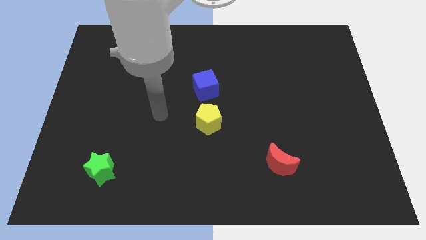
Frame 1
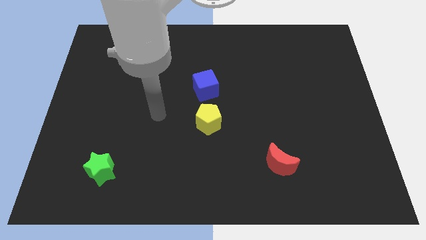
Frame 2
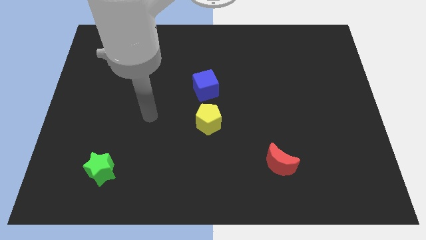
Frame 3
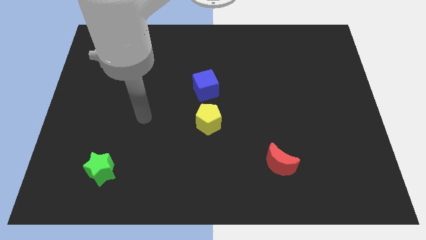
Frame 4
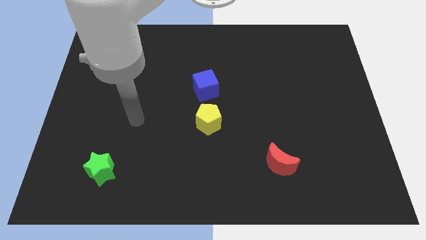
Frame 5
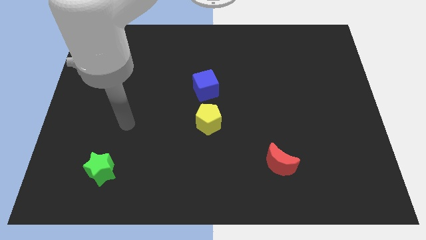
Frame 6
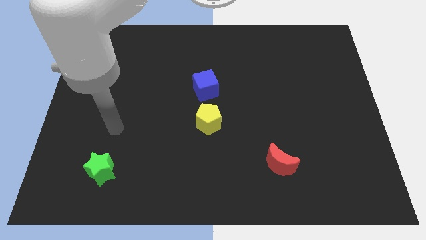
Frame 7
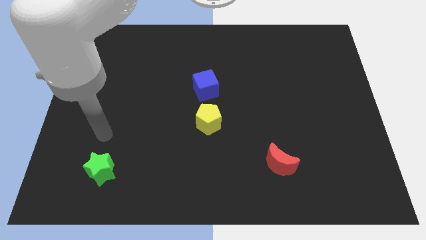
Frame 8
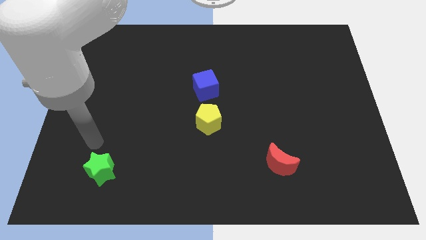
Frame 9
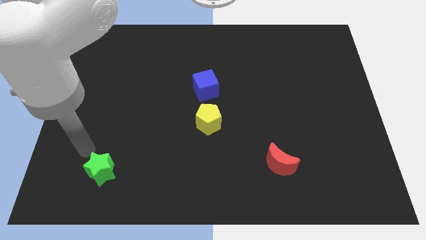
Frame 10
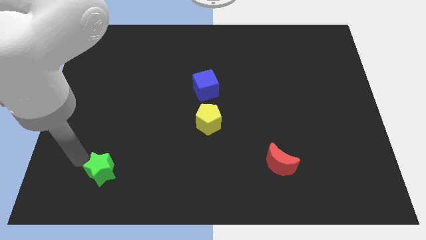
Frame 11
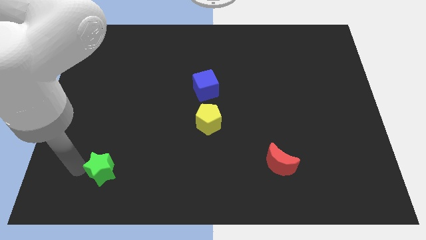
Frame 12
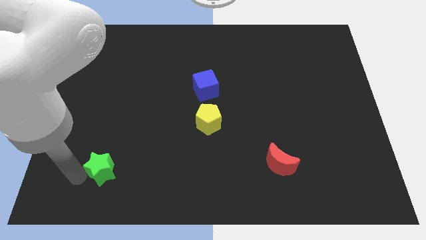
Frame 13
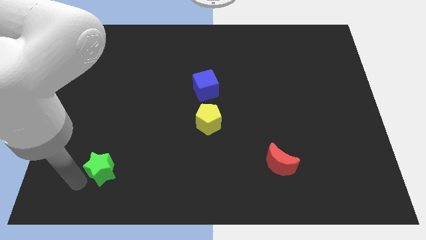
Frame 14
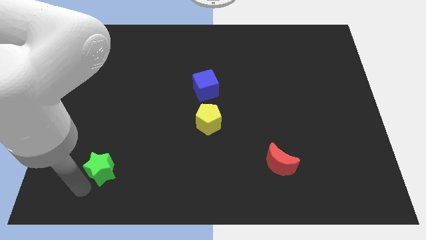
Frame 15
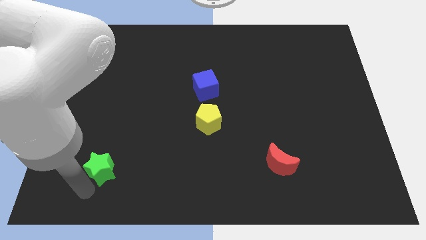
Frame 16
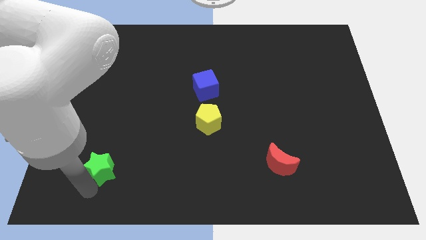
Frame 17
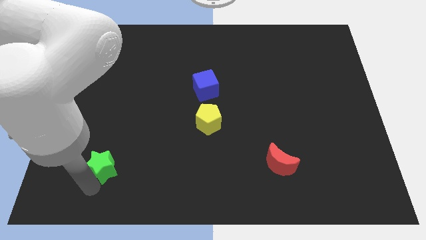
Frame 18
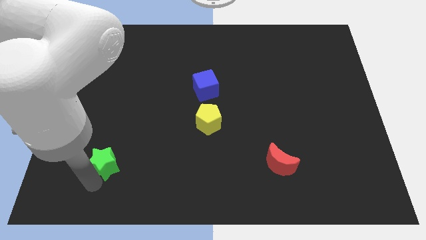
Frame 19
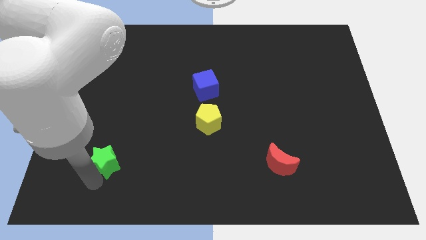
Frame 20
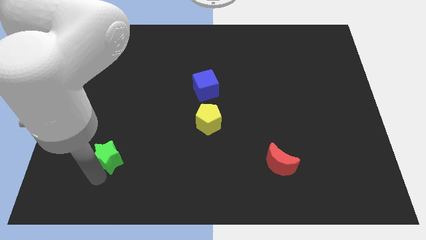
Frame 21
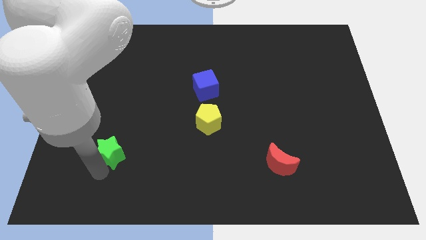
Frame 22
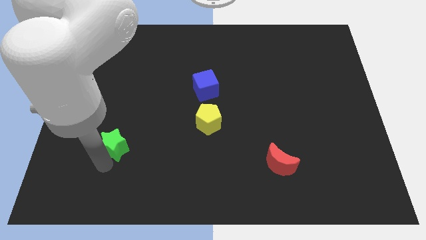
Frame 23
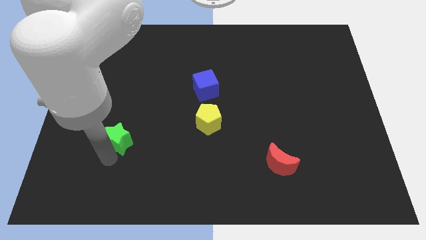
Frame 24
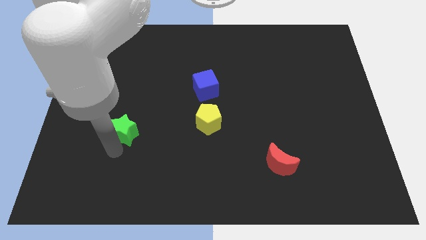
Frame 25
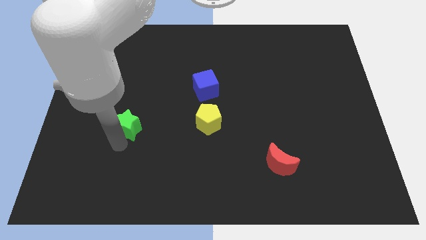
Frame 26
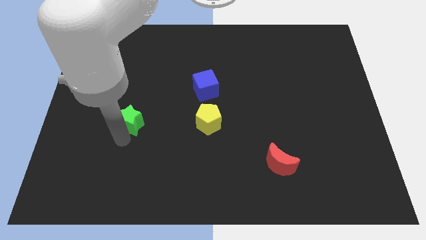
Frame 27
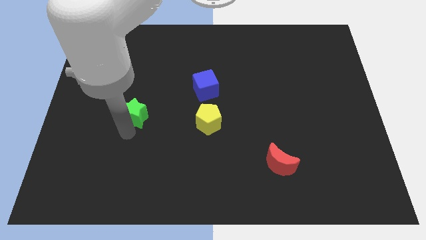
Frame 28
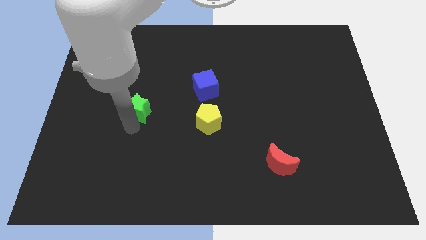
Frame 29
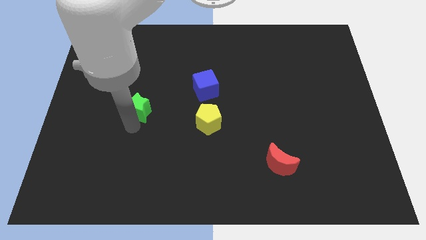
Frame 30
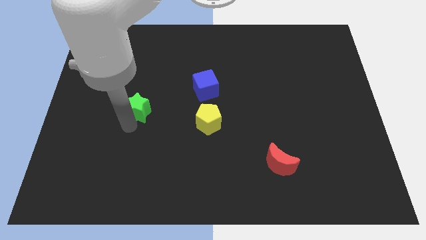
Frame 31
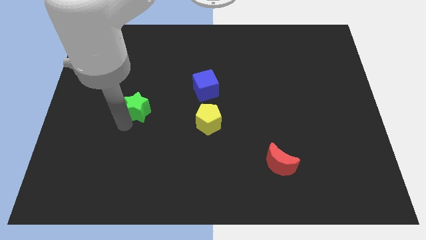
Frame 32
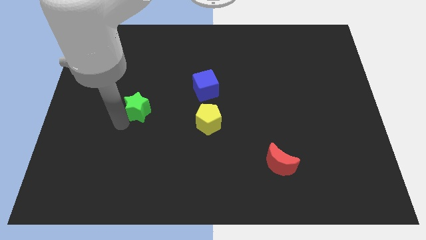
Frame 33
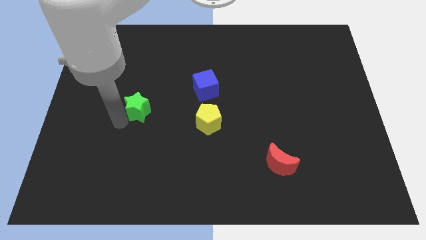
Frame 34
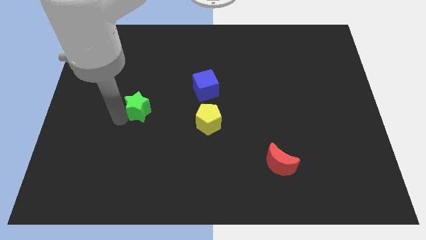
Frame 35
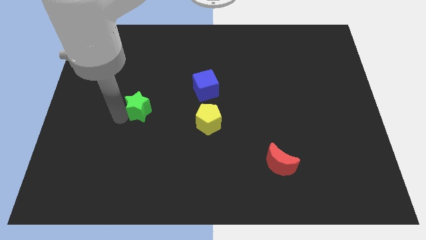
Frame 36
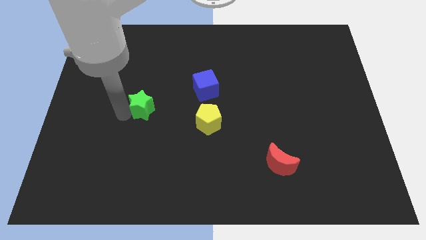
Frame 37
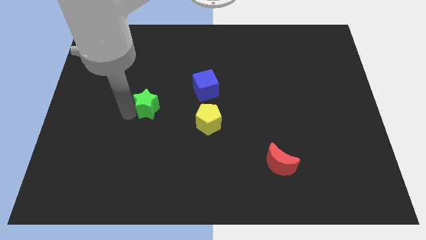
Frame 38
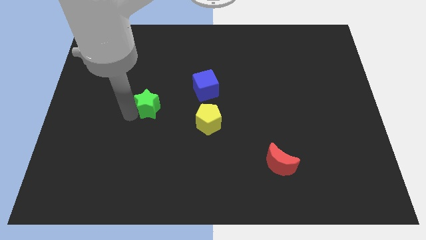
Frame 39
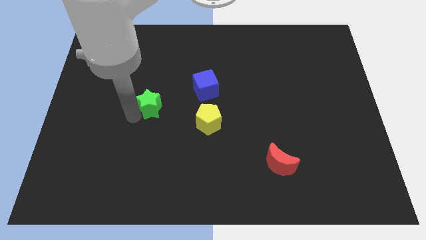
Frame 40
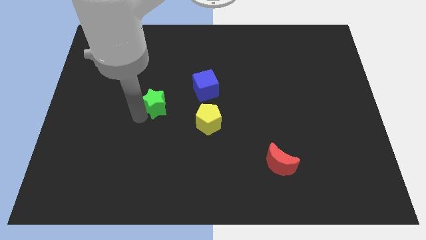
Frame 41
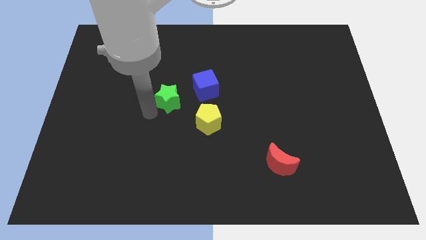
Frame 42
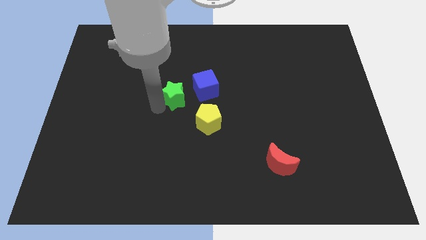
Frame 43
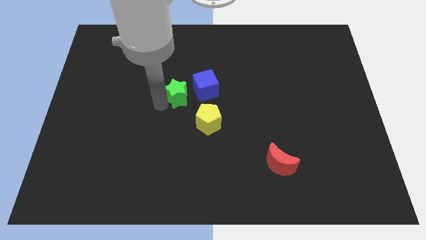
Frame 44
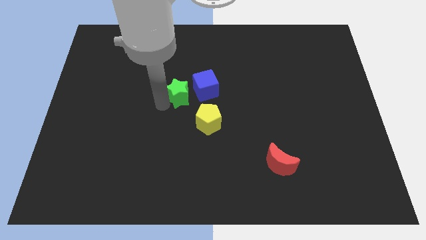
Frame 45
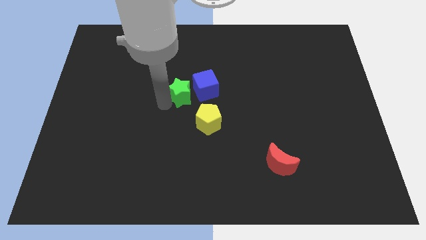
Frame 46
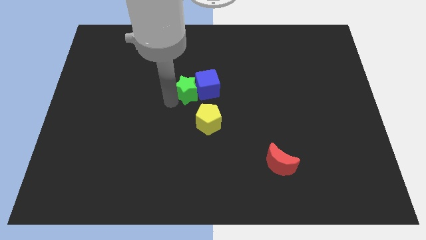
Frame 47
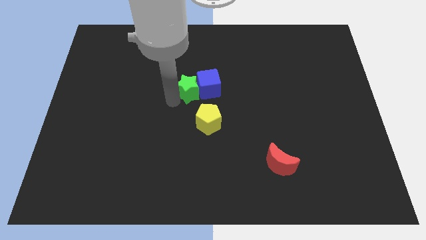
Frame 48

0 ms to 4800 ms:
slide the green block close to the cube

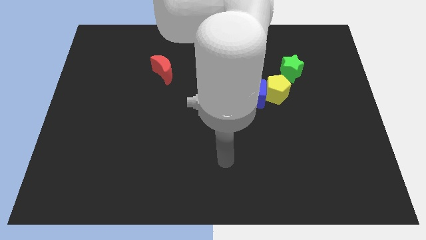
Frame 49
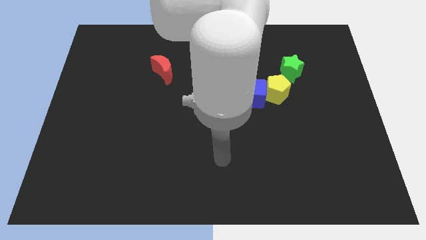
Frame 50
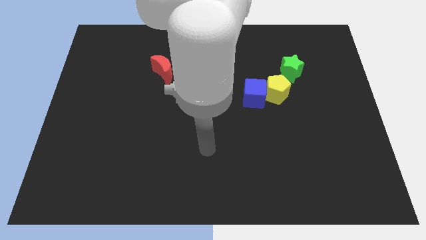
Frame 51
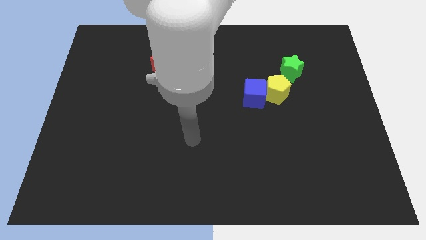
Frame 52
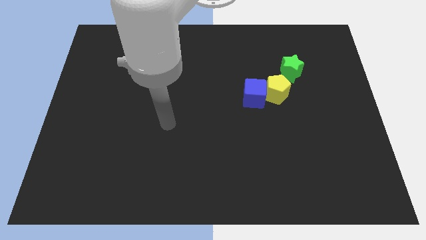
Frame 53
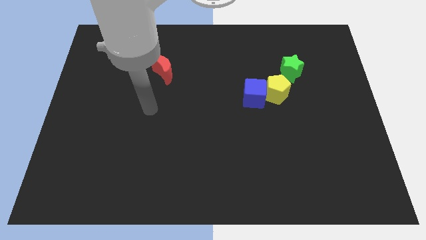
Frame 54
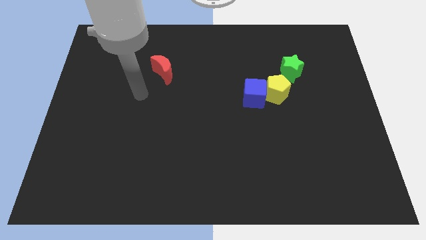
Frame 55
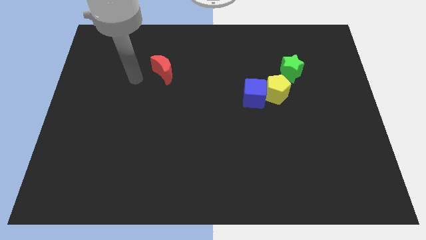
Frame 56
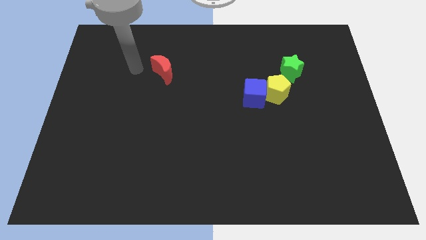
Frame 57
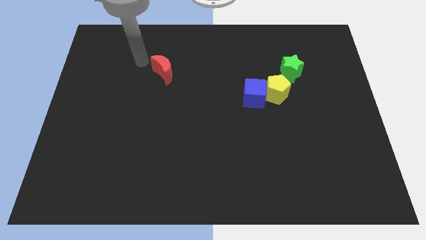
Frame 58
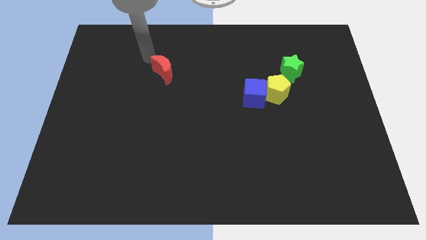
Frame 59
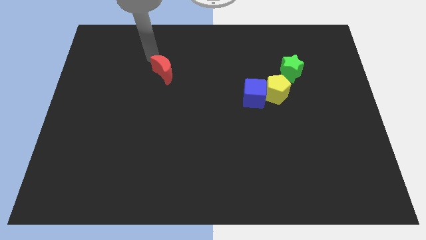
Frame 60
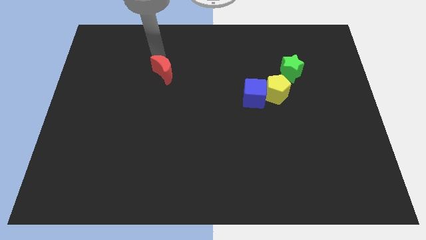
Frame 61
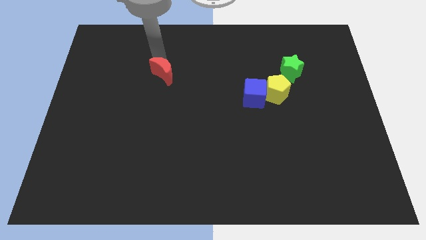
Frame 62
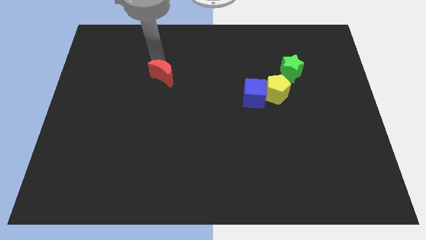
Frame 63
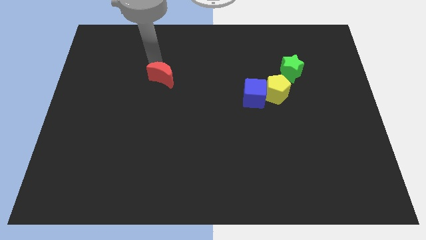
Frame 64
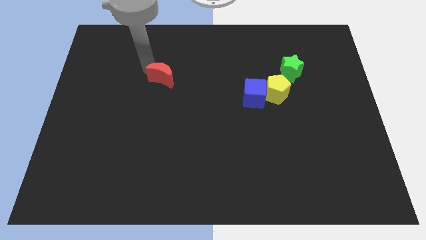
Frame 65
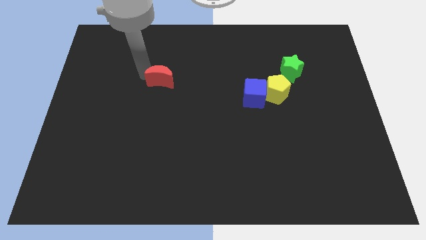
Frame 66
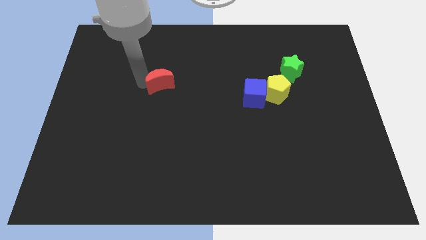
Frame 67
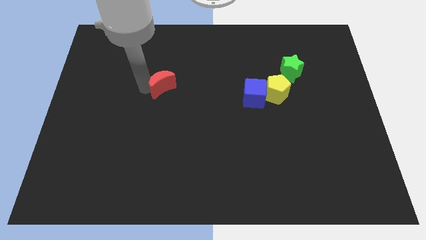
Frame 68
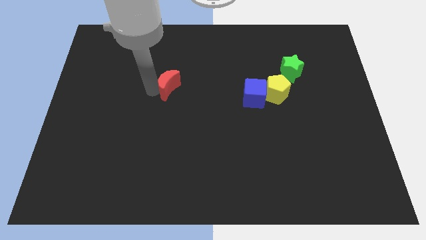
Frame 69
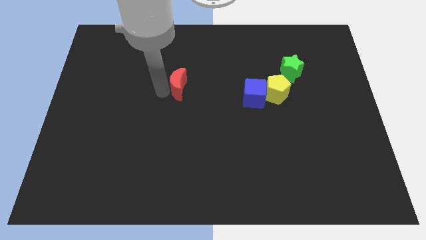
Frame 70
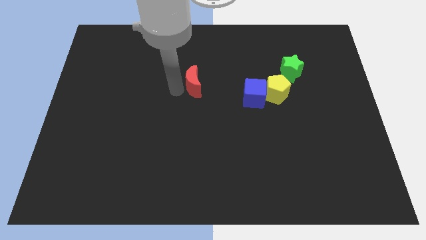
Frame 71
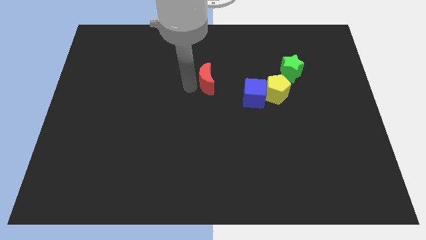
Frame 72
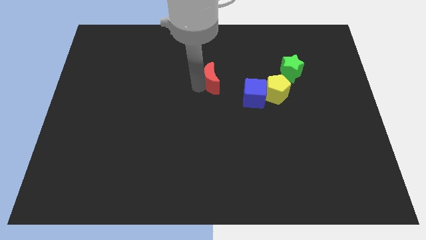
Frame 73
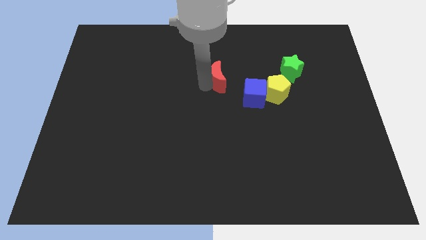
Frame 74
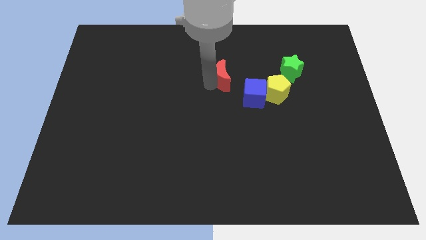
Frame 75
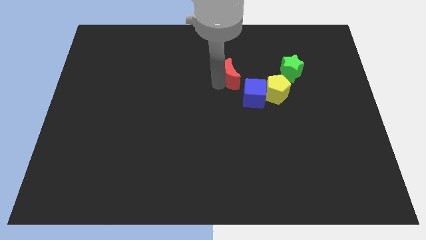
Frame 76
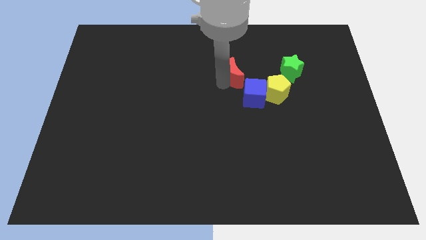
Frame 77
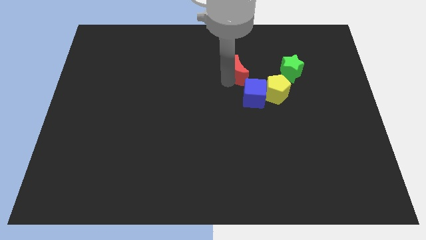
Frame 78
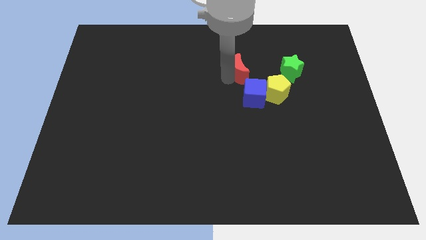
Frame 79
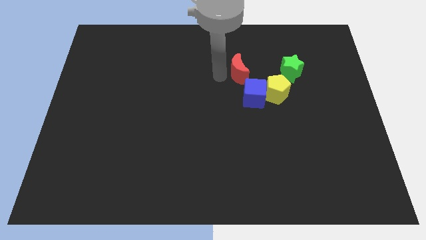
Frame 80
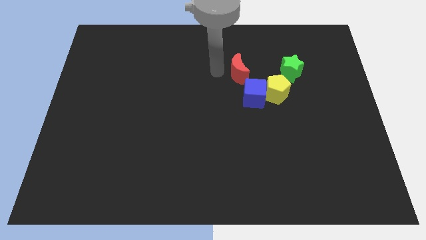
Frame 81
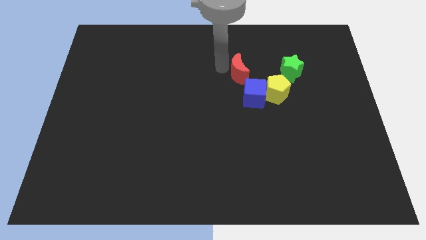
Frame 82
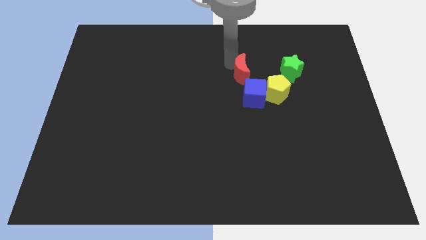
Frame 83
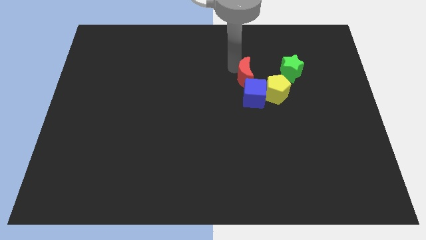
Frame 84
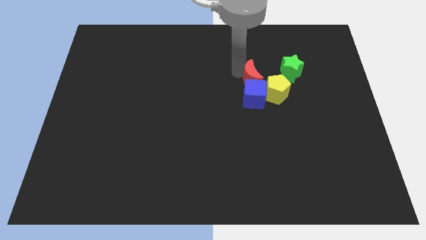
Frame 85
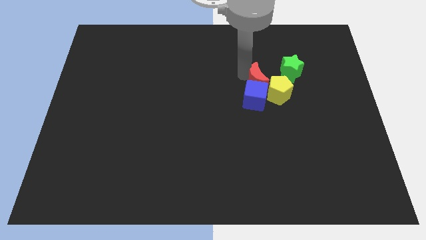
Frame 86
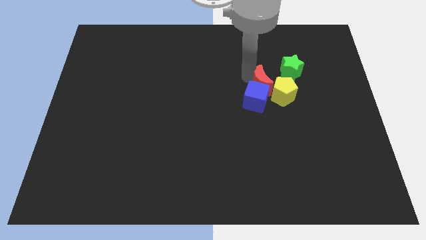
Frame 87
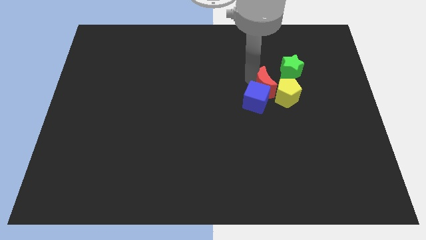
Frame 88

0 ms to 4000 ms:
push the red moon close to the pentagon
